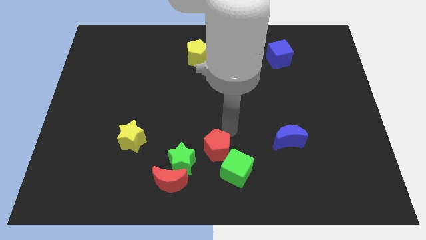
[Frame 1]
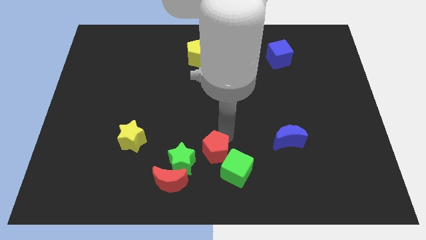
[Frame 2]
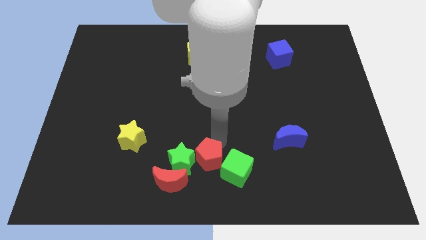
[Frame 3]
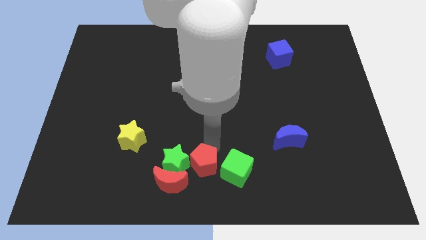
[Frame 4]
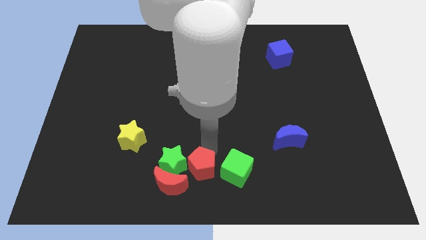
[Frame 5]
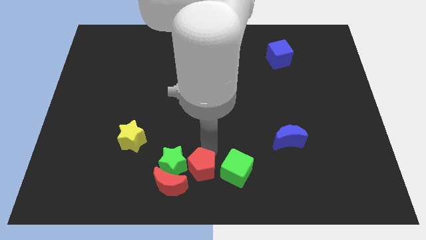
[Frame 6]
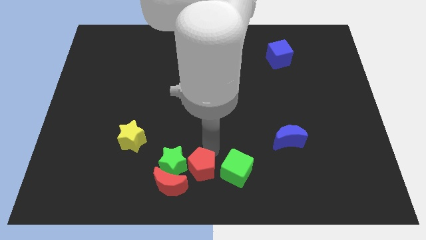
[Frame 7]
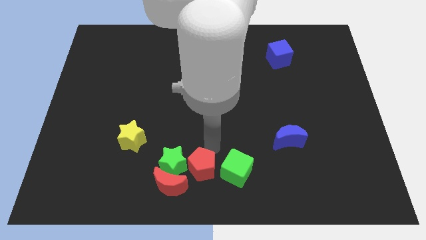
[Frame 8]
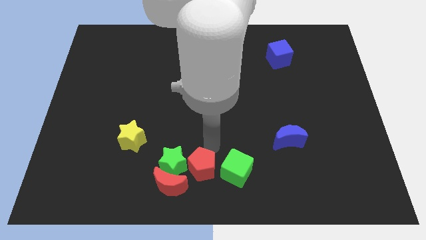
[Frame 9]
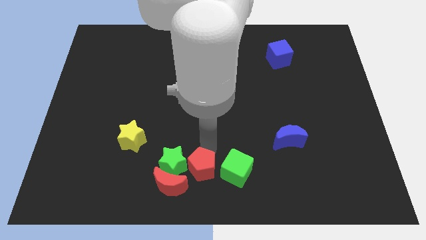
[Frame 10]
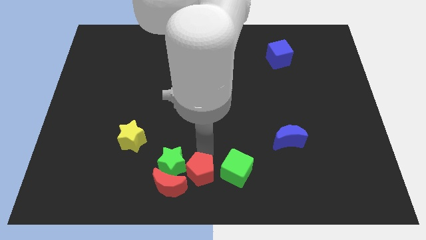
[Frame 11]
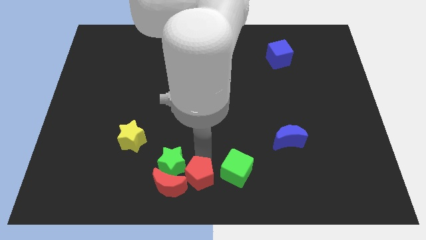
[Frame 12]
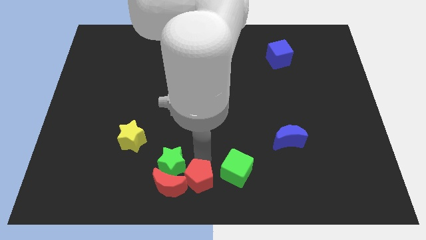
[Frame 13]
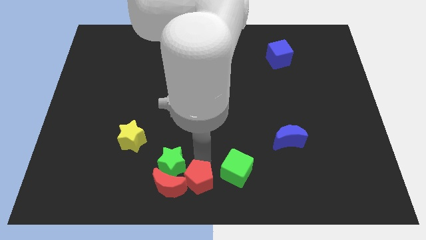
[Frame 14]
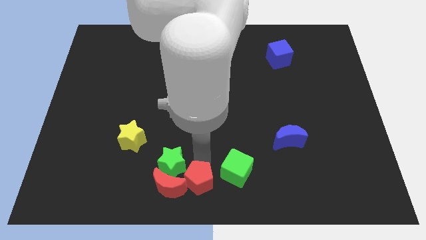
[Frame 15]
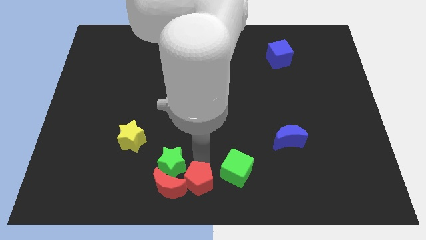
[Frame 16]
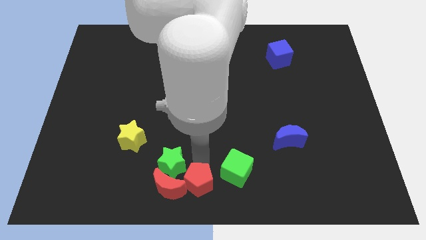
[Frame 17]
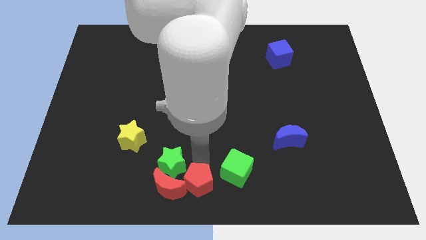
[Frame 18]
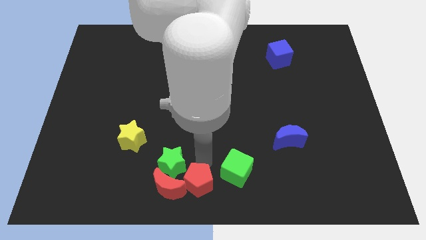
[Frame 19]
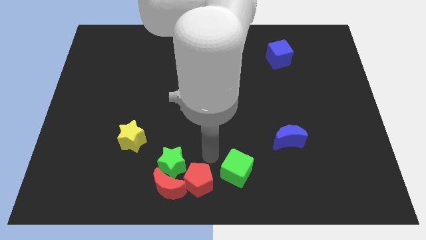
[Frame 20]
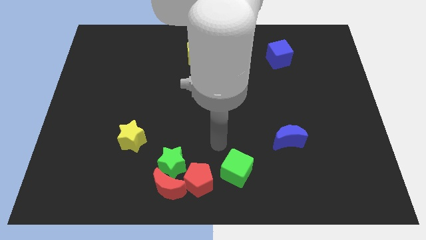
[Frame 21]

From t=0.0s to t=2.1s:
place the red pentagon at the right of the red crescent

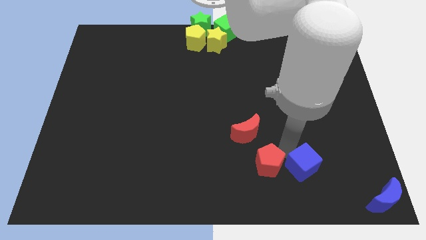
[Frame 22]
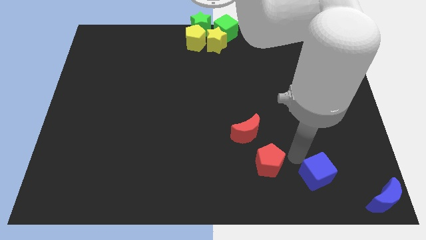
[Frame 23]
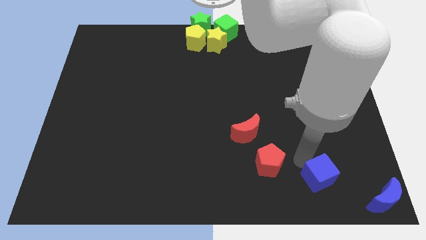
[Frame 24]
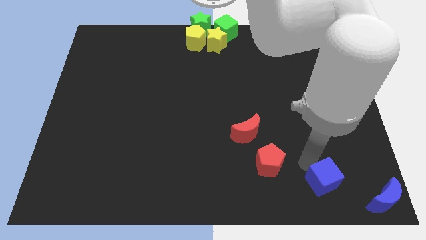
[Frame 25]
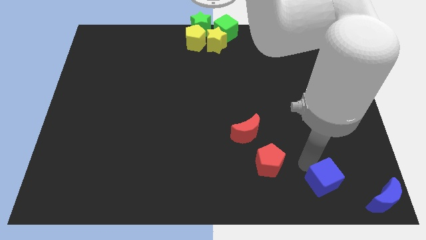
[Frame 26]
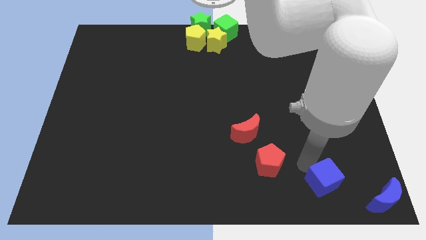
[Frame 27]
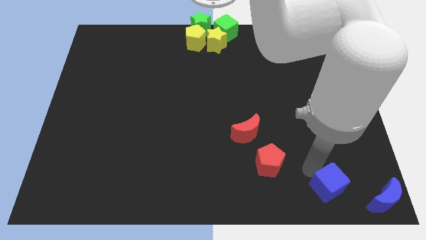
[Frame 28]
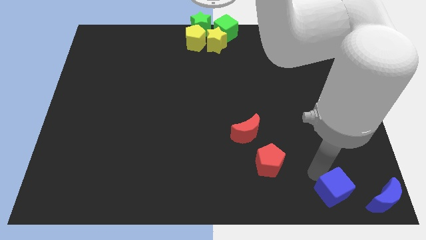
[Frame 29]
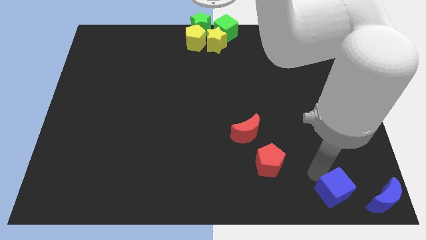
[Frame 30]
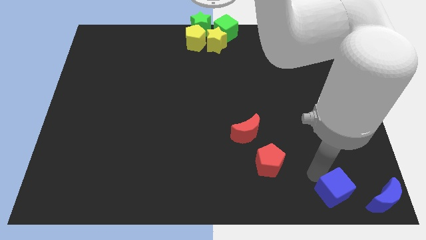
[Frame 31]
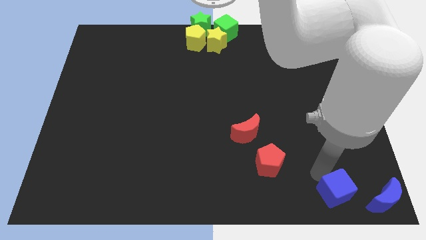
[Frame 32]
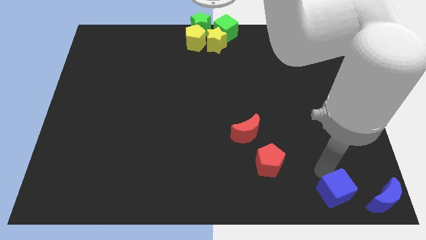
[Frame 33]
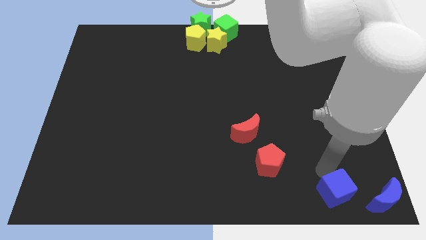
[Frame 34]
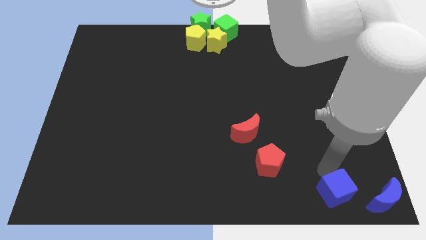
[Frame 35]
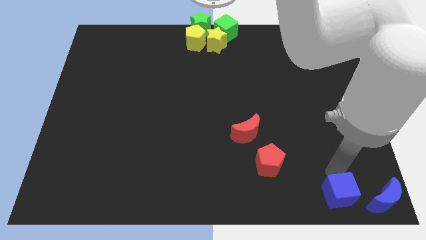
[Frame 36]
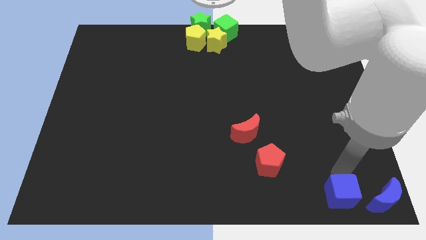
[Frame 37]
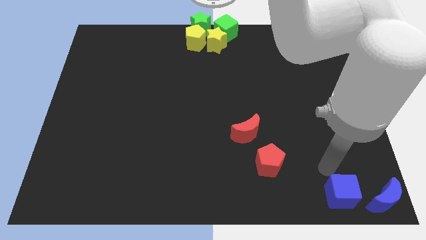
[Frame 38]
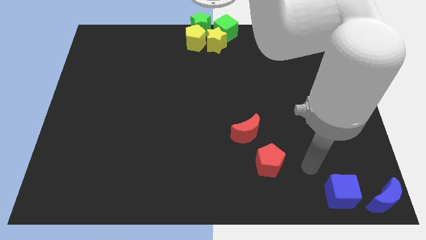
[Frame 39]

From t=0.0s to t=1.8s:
place the blue cube to the left side of blue moon

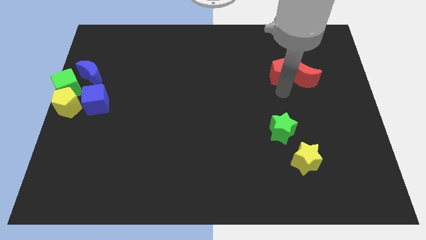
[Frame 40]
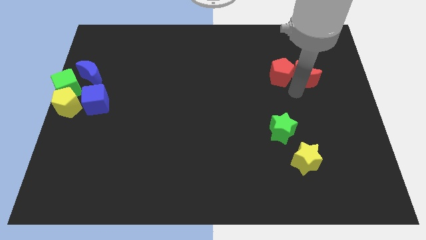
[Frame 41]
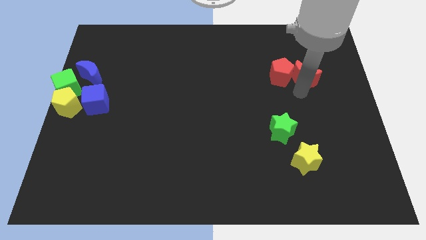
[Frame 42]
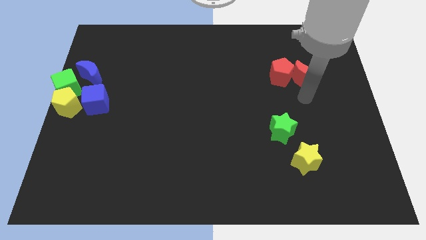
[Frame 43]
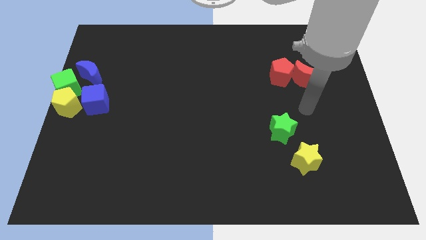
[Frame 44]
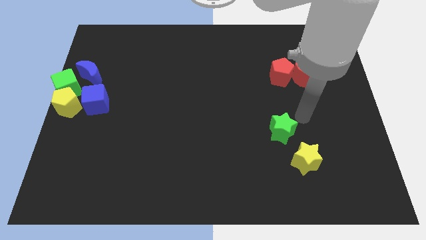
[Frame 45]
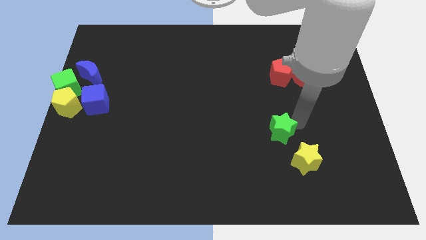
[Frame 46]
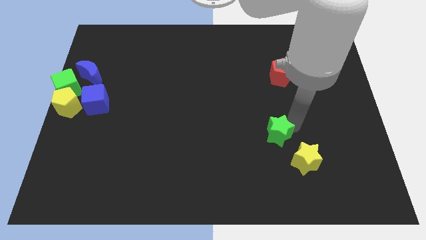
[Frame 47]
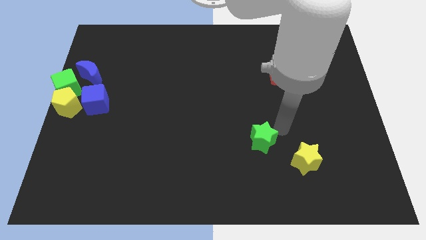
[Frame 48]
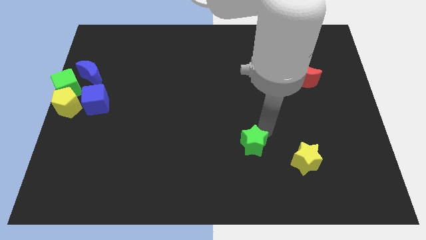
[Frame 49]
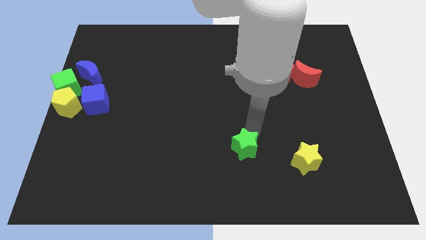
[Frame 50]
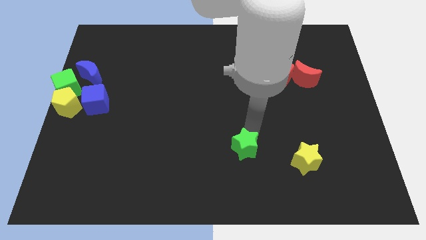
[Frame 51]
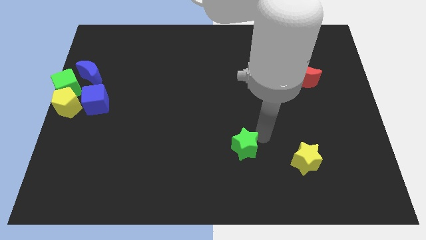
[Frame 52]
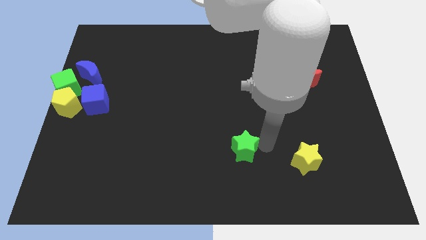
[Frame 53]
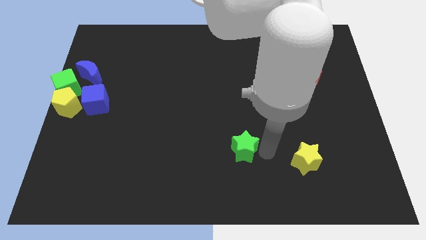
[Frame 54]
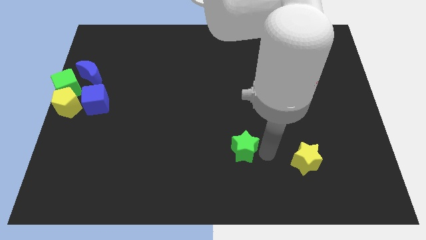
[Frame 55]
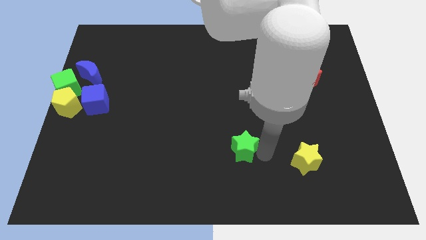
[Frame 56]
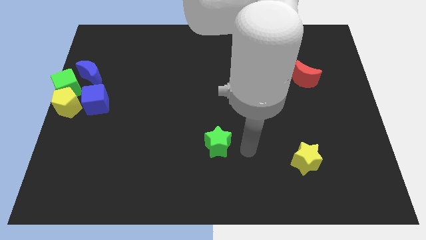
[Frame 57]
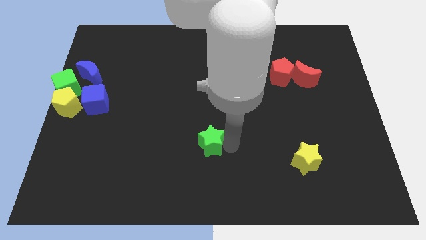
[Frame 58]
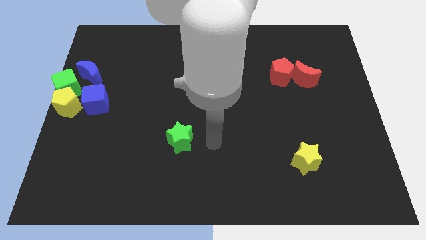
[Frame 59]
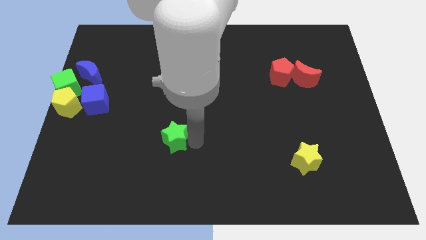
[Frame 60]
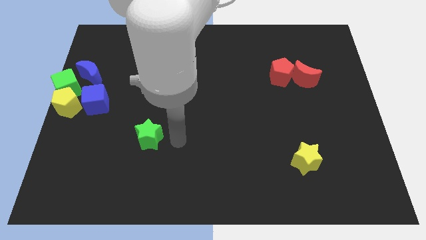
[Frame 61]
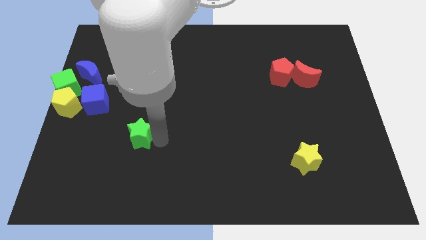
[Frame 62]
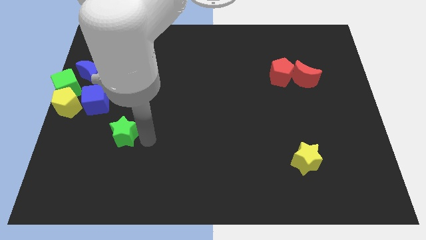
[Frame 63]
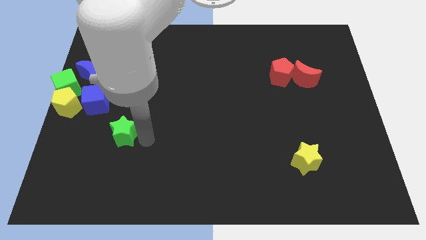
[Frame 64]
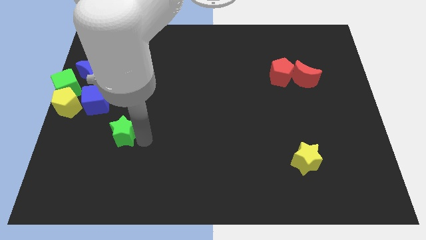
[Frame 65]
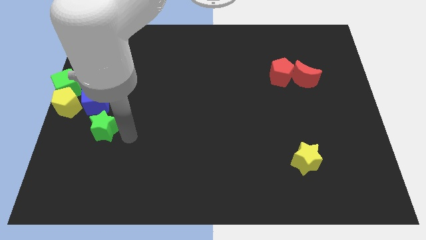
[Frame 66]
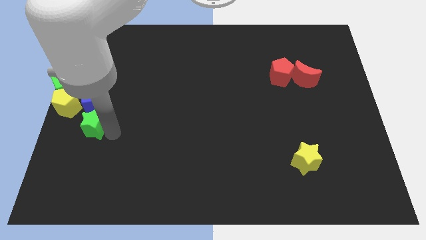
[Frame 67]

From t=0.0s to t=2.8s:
place the green star below the blue cube

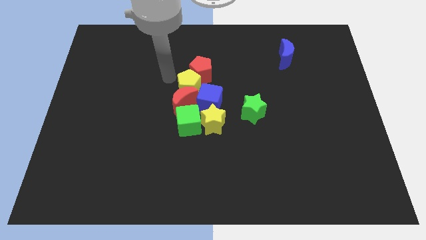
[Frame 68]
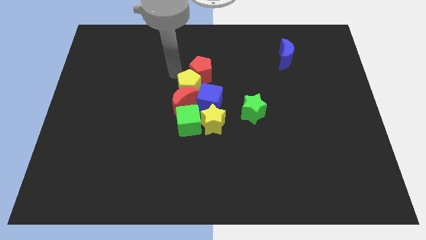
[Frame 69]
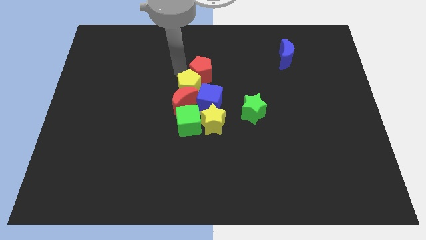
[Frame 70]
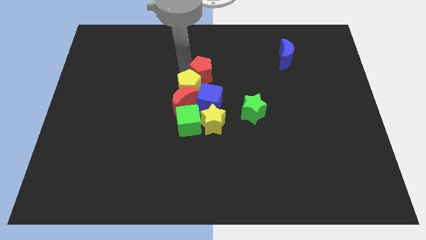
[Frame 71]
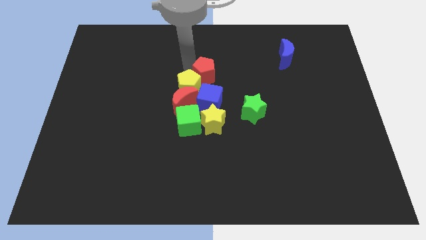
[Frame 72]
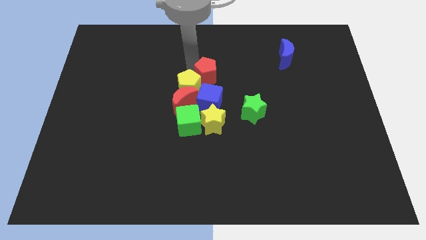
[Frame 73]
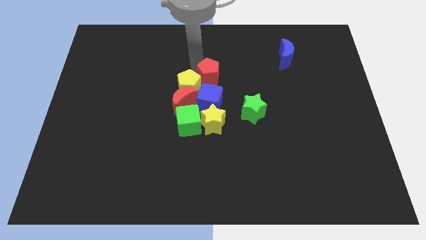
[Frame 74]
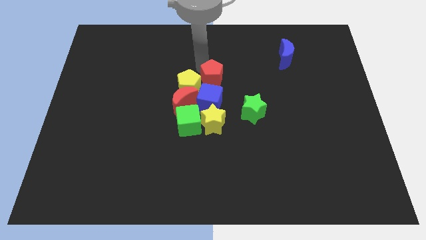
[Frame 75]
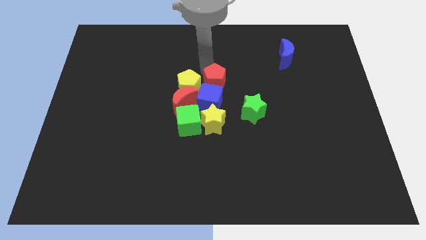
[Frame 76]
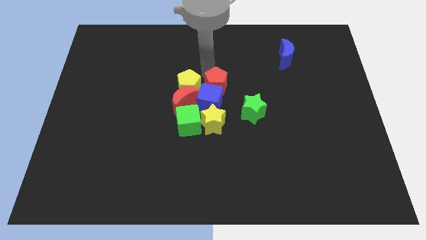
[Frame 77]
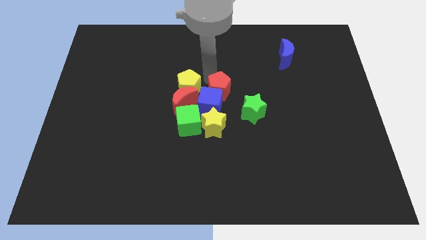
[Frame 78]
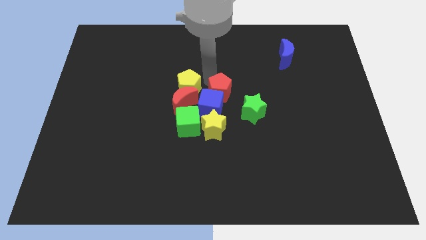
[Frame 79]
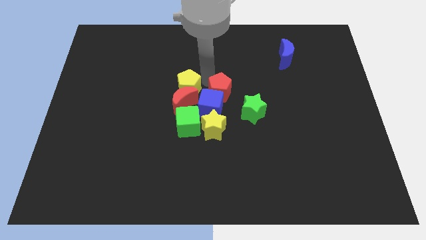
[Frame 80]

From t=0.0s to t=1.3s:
push the red pentagon above the blue cube

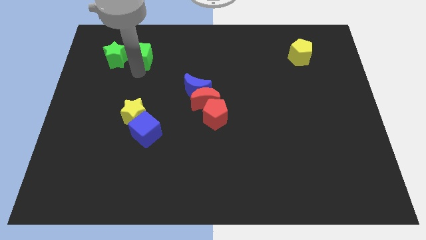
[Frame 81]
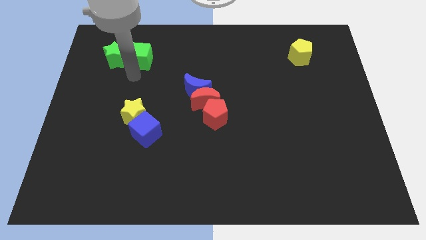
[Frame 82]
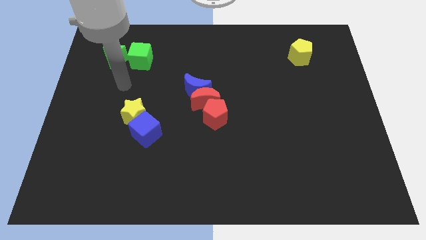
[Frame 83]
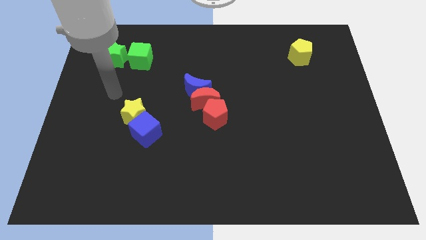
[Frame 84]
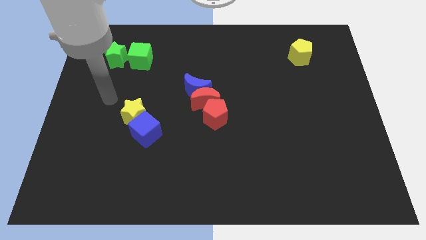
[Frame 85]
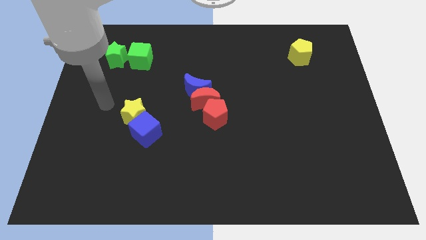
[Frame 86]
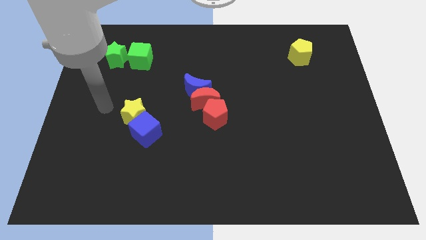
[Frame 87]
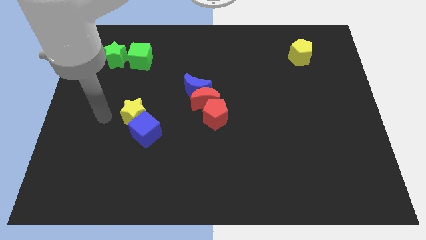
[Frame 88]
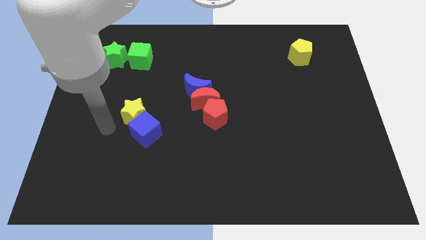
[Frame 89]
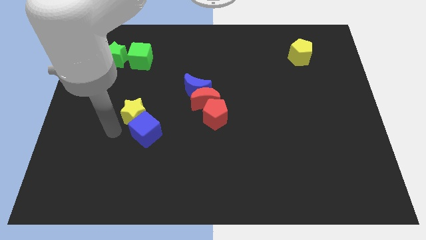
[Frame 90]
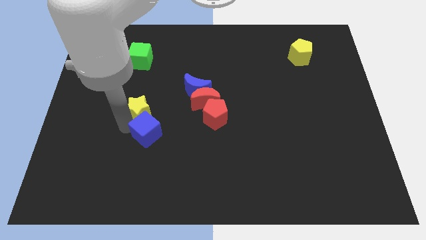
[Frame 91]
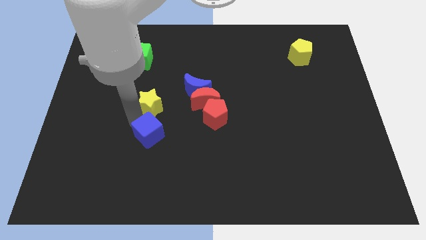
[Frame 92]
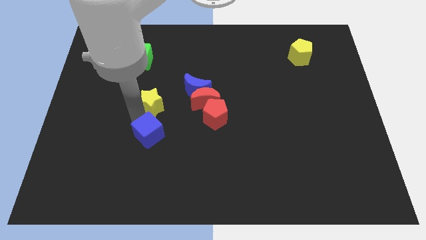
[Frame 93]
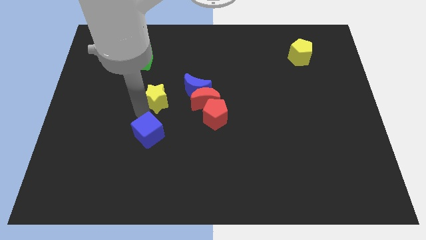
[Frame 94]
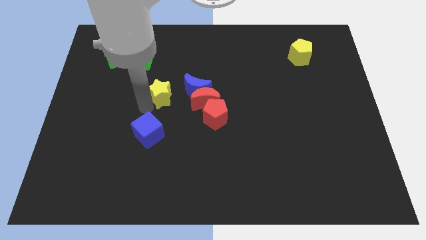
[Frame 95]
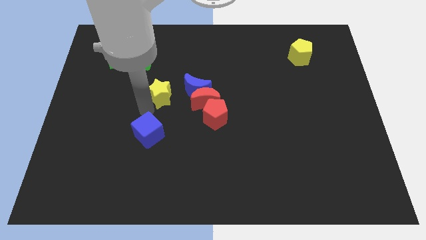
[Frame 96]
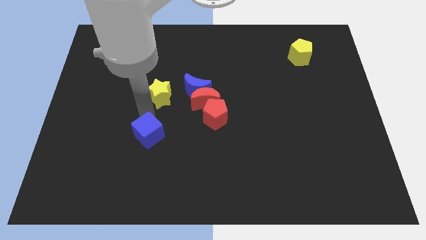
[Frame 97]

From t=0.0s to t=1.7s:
separate the yellow star from blue cube
